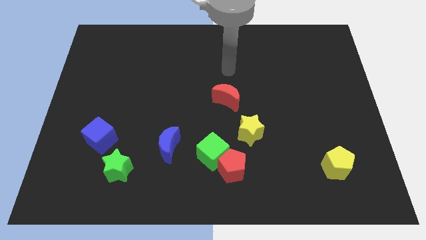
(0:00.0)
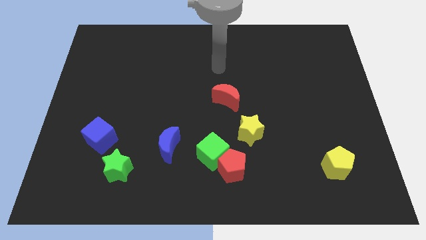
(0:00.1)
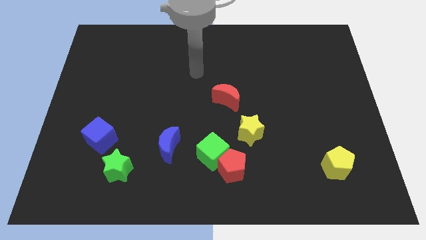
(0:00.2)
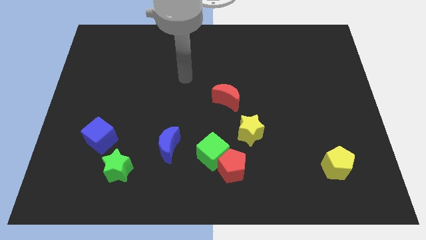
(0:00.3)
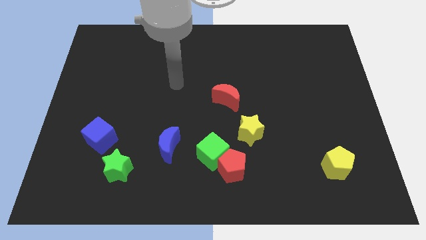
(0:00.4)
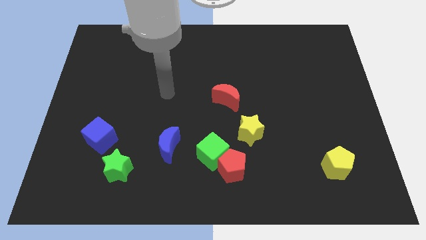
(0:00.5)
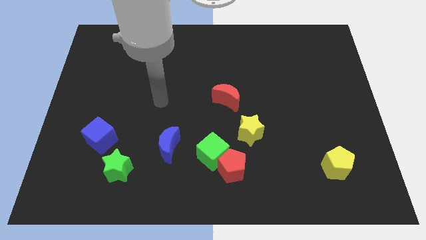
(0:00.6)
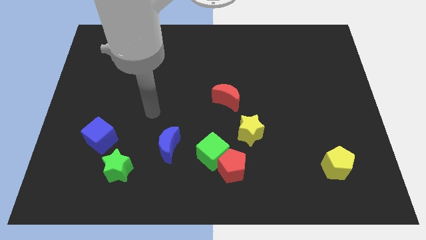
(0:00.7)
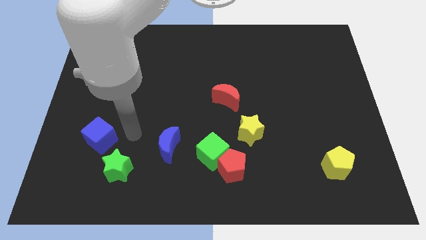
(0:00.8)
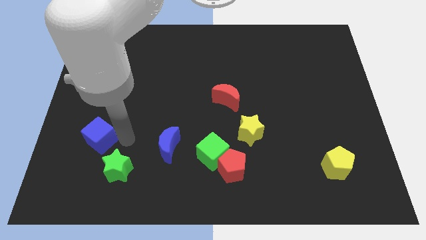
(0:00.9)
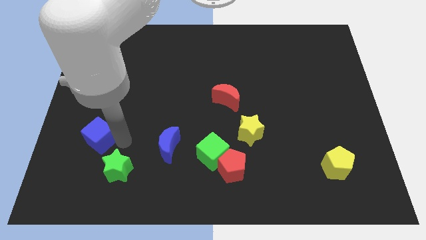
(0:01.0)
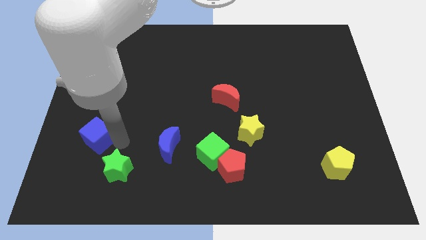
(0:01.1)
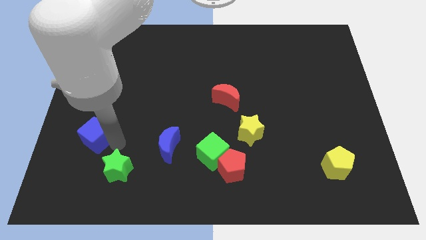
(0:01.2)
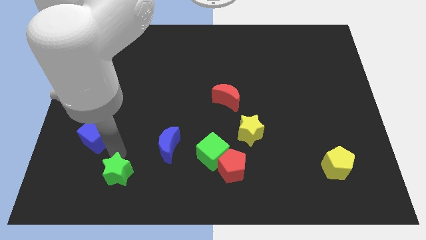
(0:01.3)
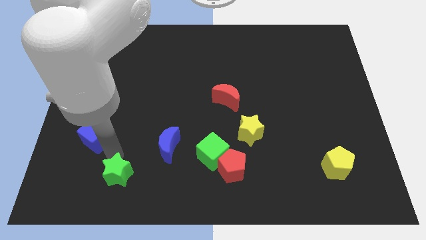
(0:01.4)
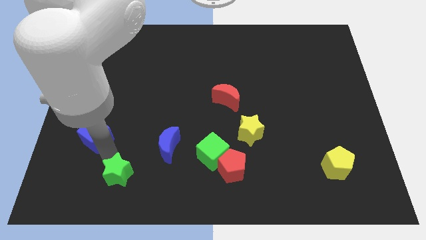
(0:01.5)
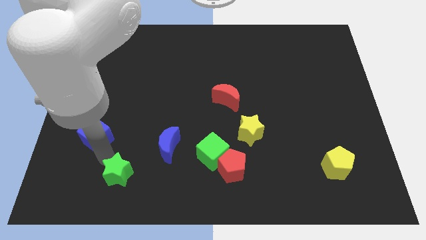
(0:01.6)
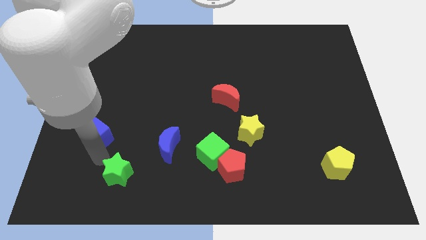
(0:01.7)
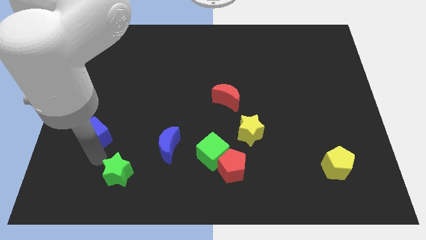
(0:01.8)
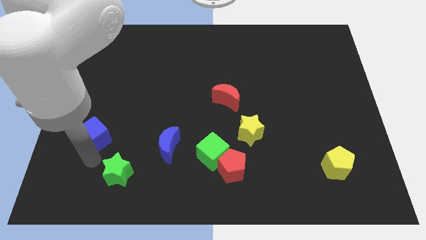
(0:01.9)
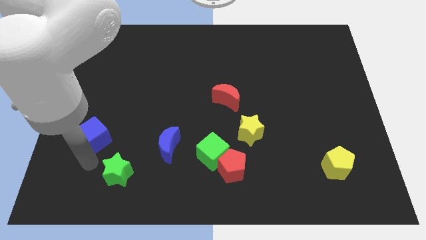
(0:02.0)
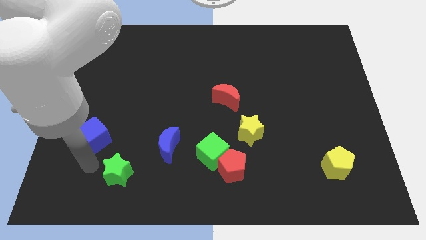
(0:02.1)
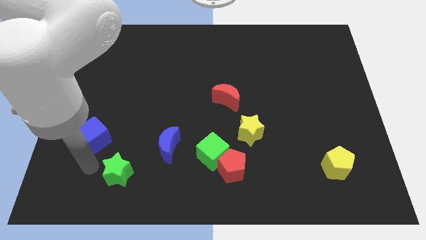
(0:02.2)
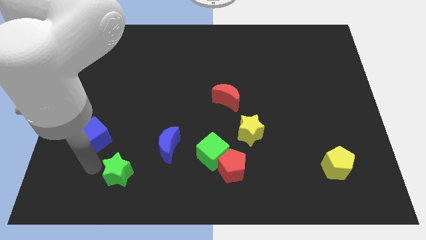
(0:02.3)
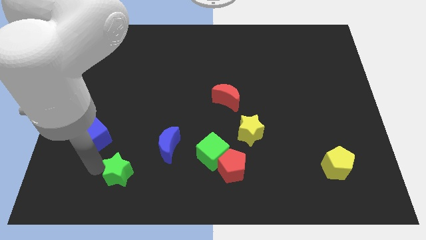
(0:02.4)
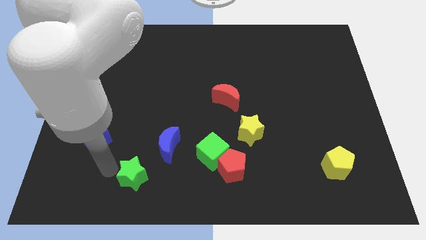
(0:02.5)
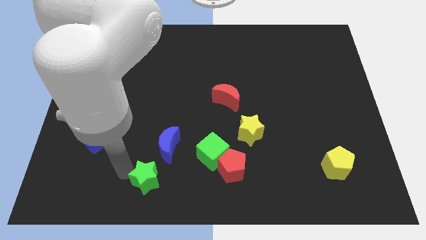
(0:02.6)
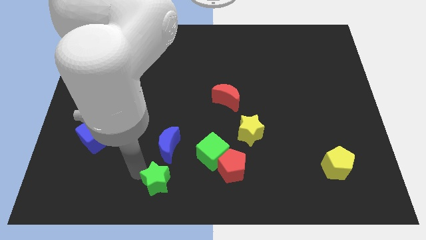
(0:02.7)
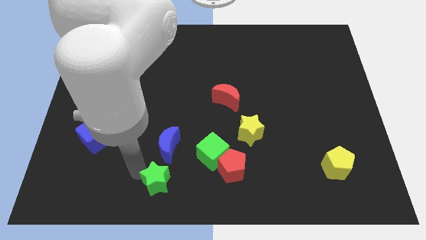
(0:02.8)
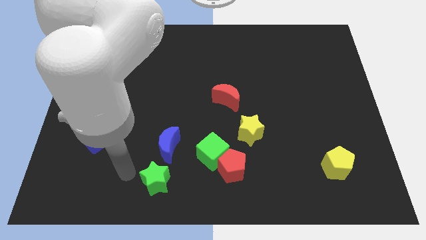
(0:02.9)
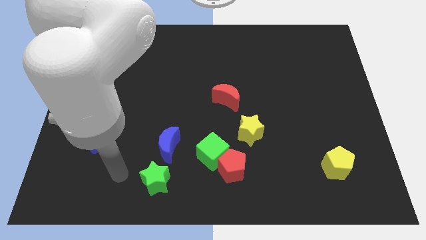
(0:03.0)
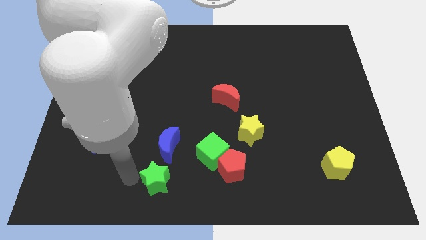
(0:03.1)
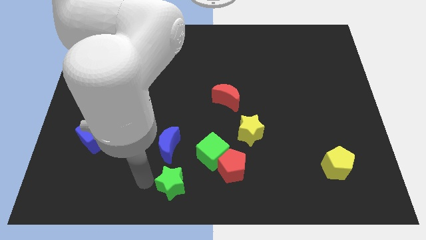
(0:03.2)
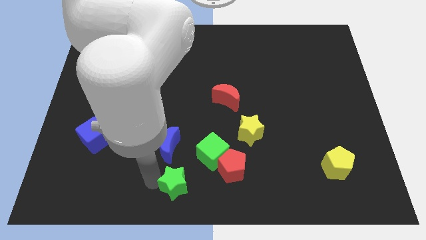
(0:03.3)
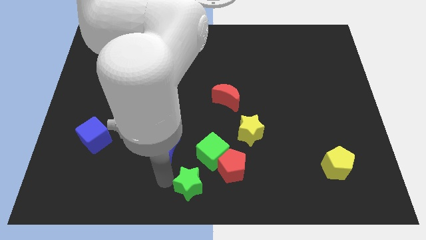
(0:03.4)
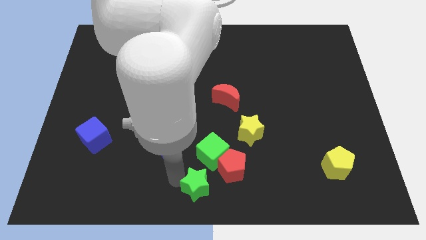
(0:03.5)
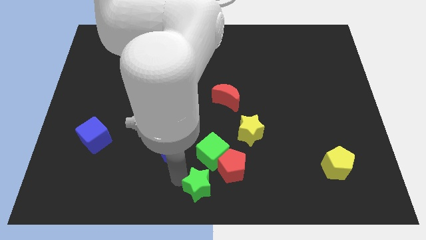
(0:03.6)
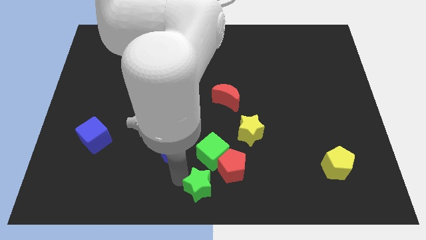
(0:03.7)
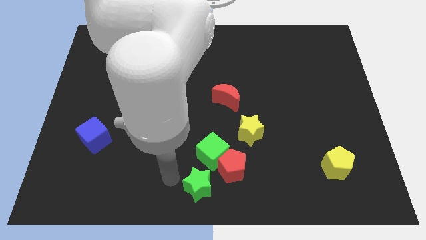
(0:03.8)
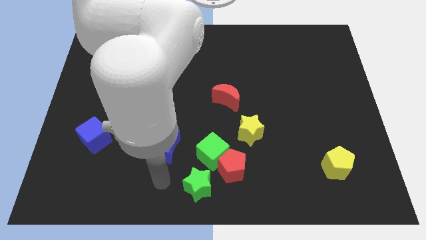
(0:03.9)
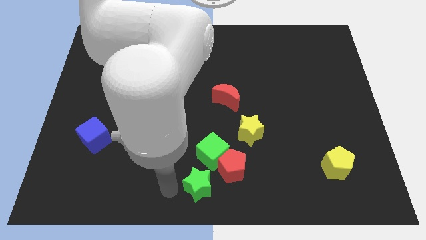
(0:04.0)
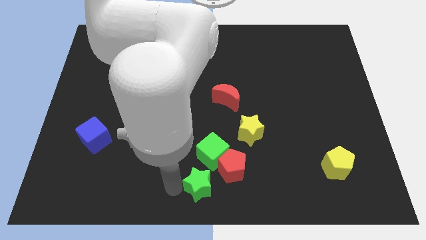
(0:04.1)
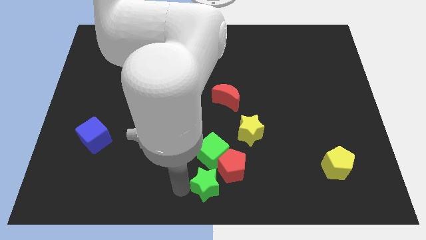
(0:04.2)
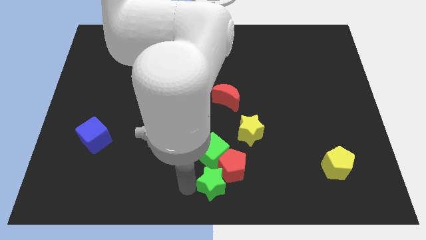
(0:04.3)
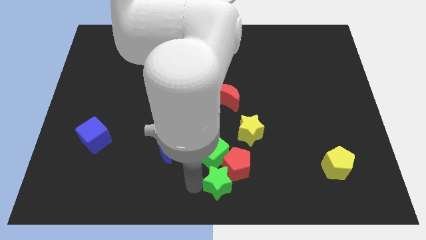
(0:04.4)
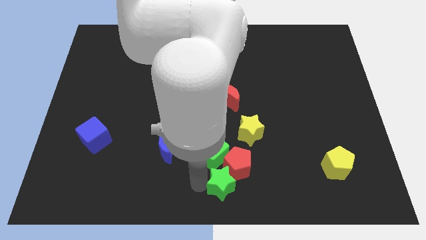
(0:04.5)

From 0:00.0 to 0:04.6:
slide the green star to the red pentagon

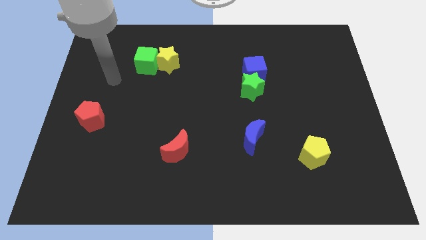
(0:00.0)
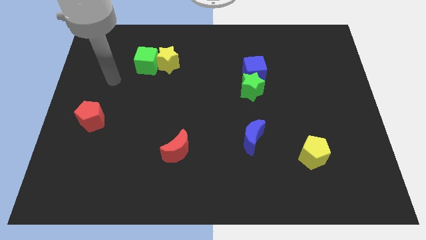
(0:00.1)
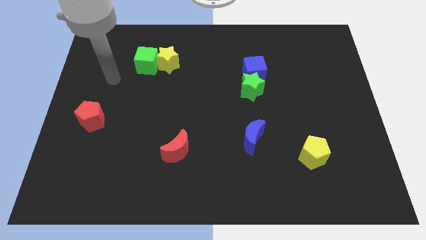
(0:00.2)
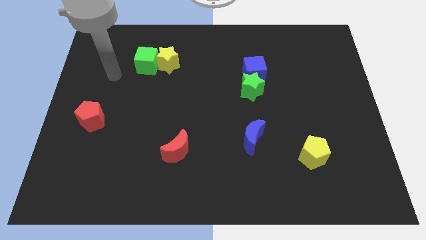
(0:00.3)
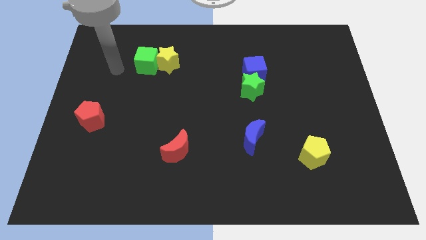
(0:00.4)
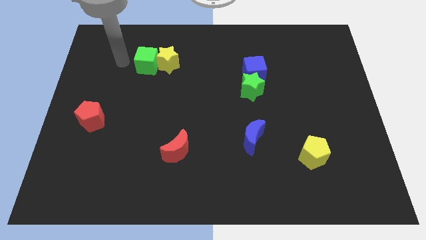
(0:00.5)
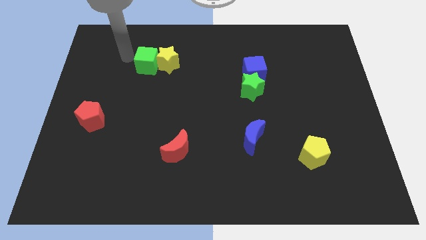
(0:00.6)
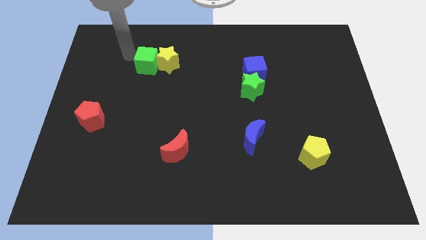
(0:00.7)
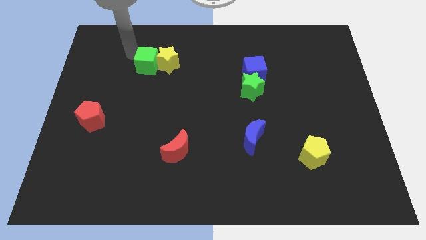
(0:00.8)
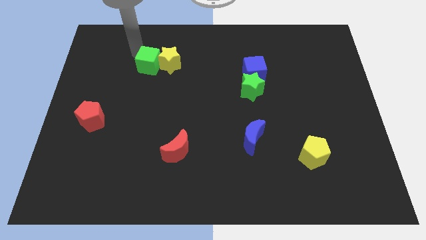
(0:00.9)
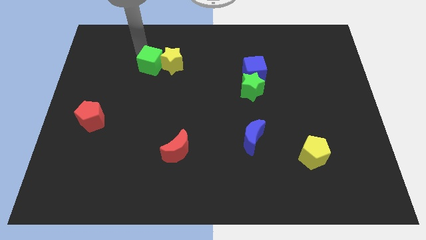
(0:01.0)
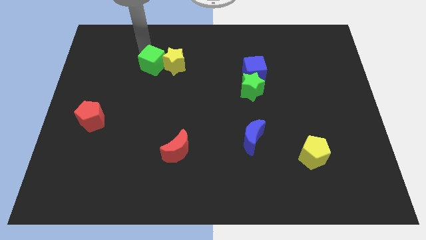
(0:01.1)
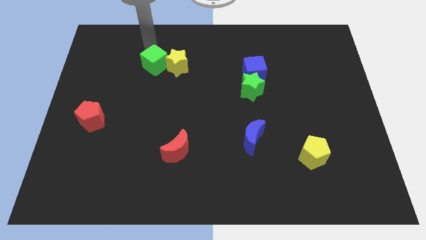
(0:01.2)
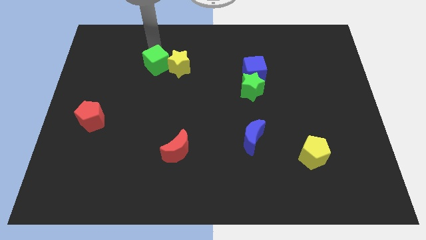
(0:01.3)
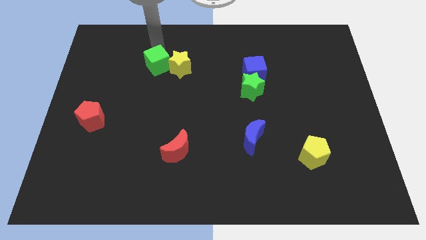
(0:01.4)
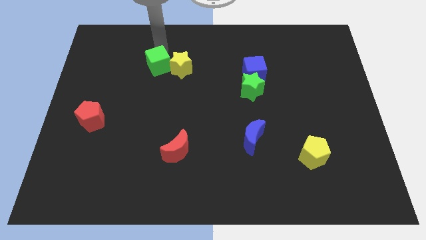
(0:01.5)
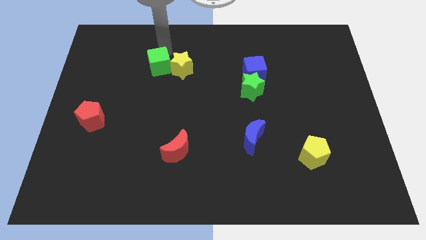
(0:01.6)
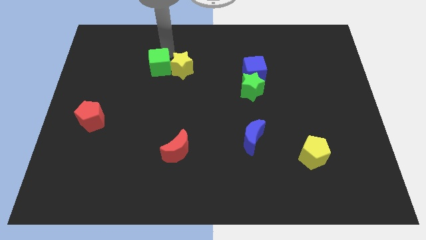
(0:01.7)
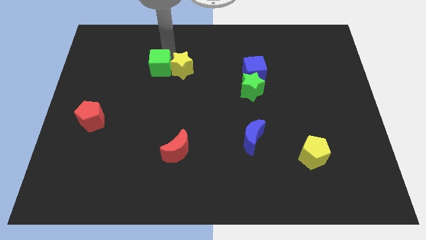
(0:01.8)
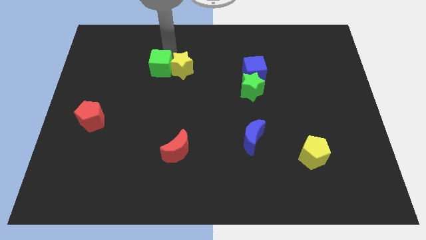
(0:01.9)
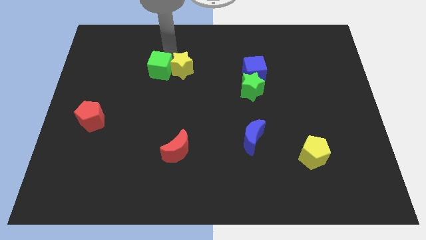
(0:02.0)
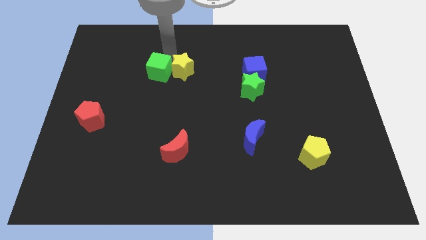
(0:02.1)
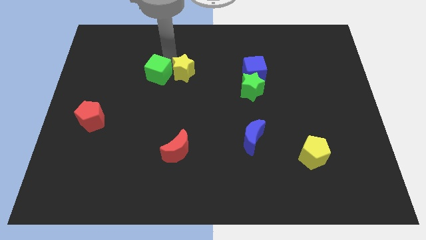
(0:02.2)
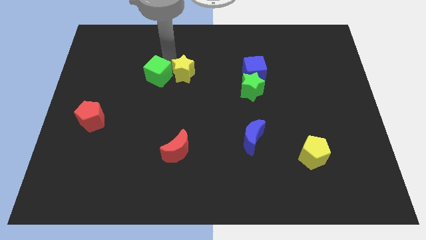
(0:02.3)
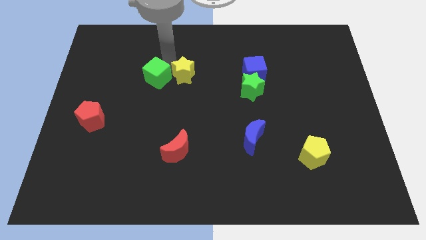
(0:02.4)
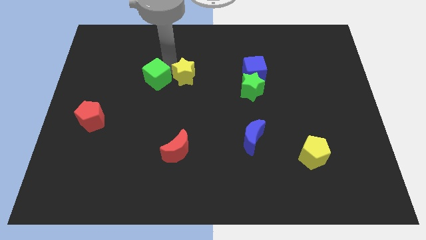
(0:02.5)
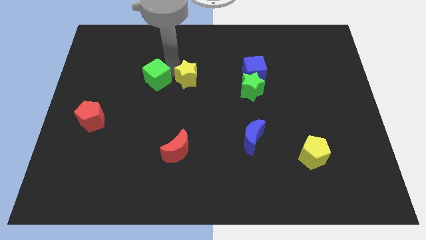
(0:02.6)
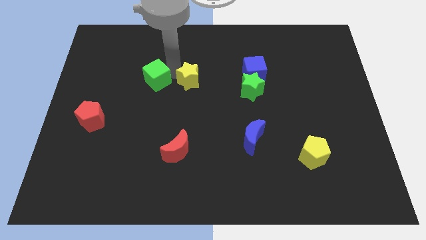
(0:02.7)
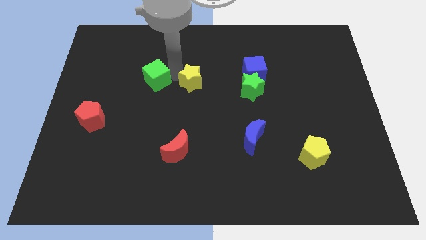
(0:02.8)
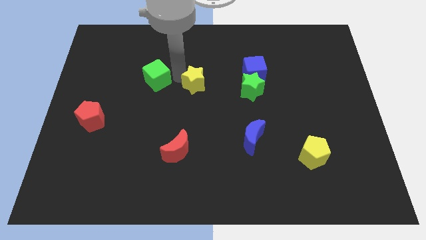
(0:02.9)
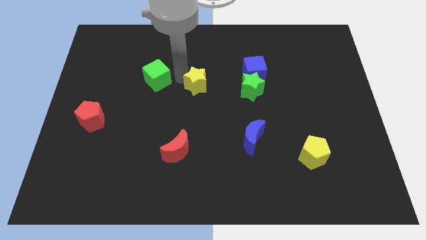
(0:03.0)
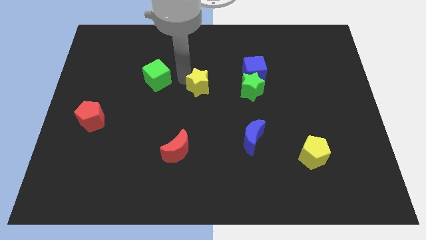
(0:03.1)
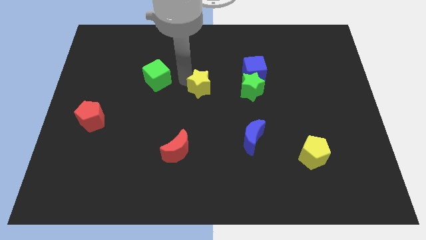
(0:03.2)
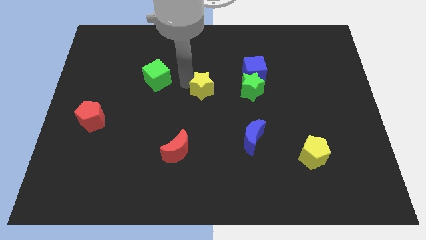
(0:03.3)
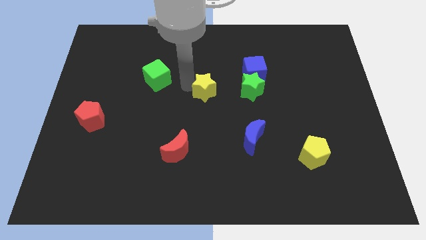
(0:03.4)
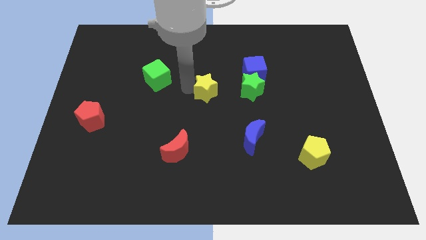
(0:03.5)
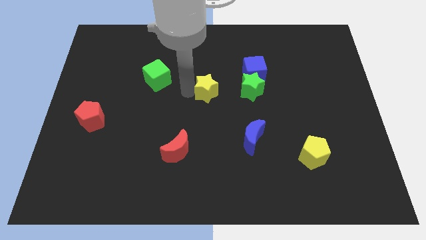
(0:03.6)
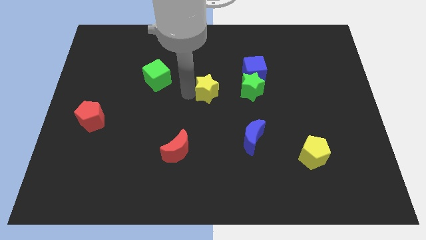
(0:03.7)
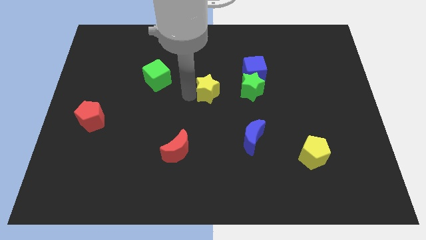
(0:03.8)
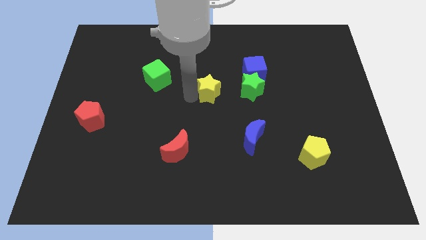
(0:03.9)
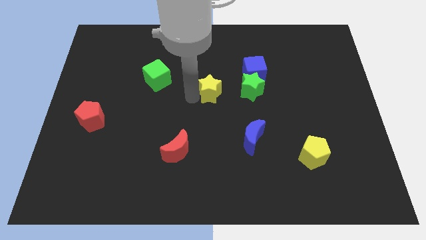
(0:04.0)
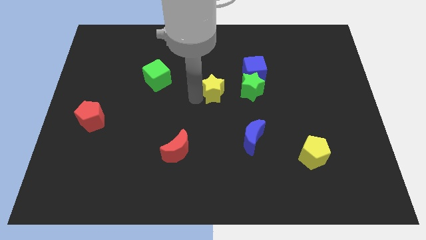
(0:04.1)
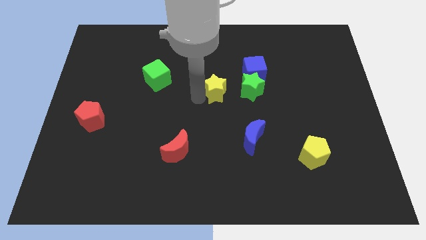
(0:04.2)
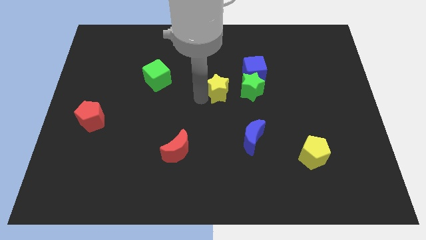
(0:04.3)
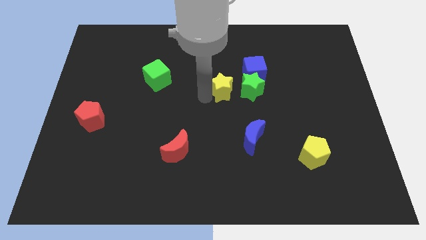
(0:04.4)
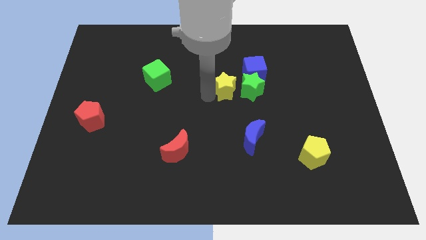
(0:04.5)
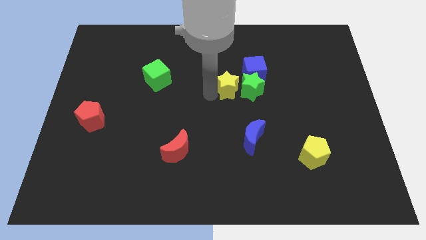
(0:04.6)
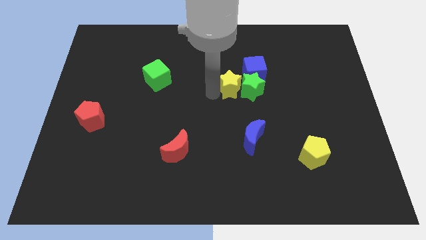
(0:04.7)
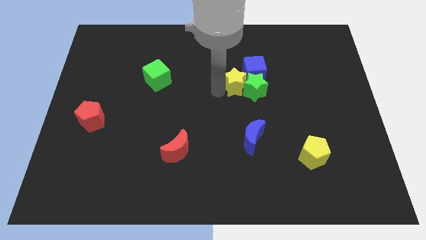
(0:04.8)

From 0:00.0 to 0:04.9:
move the yellow star towards the green star
